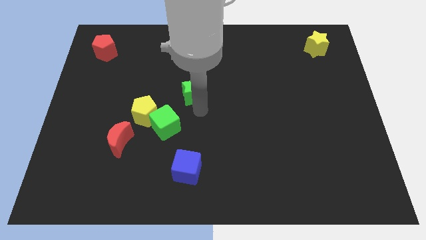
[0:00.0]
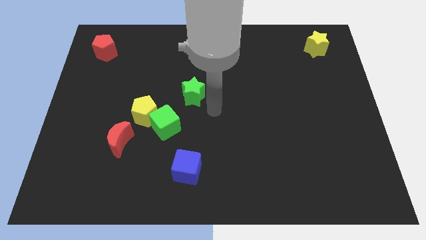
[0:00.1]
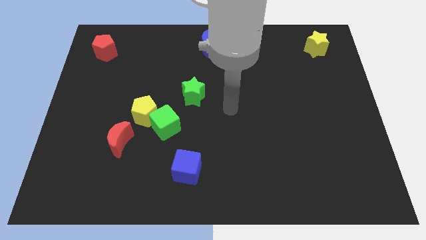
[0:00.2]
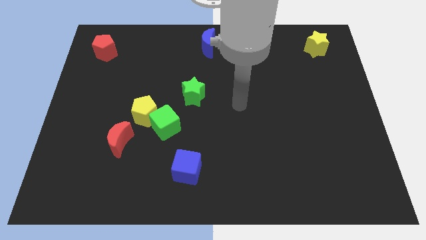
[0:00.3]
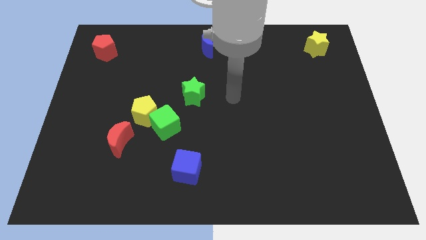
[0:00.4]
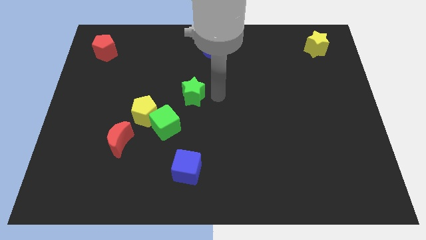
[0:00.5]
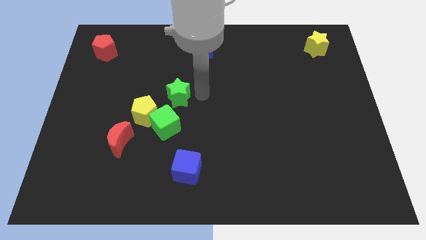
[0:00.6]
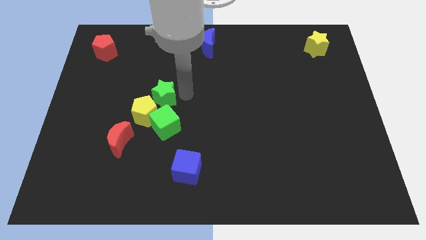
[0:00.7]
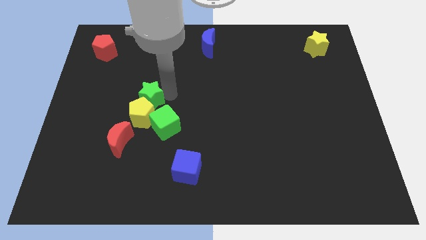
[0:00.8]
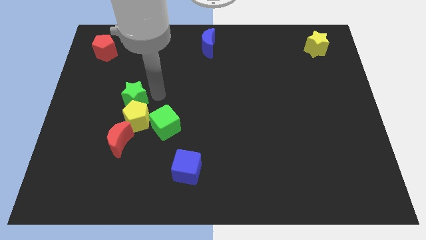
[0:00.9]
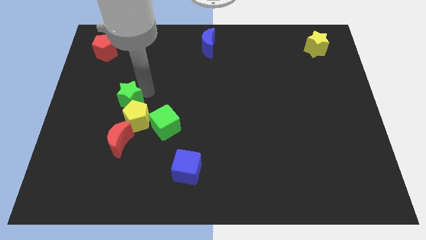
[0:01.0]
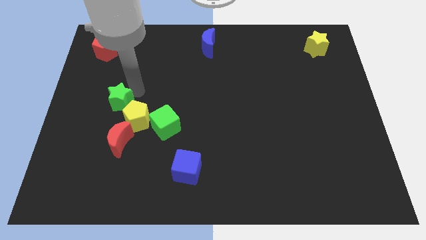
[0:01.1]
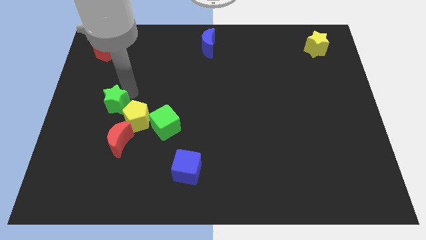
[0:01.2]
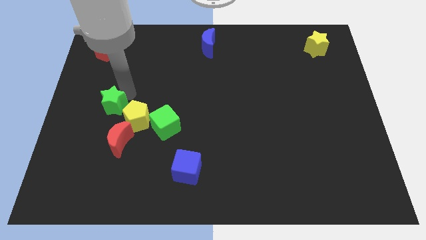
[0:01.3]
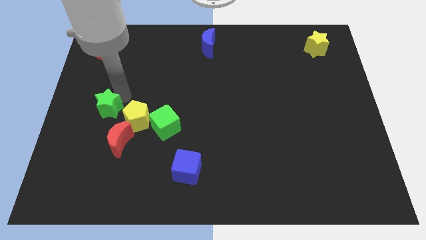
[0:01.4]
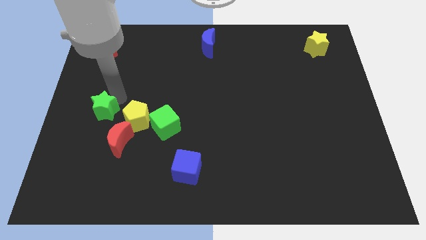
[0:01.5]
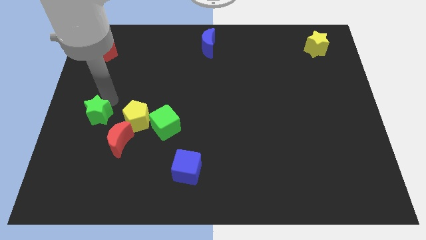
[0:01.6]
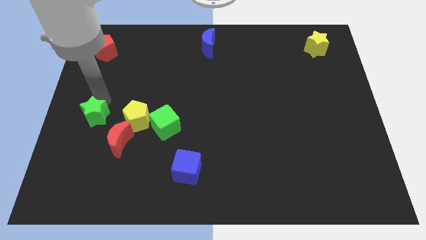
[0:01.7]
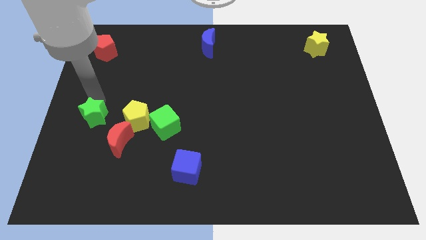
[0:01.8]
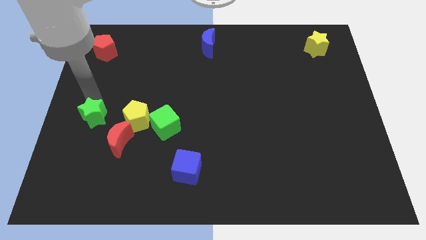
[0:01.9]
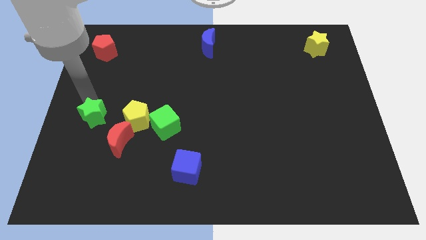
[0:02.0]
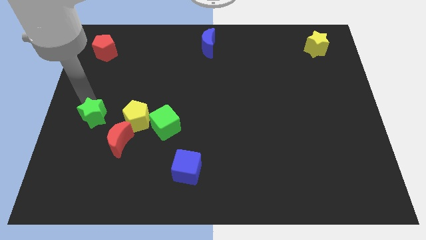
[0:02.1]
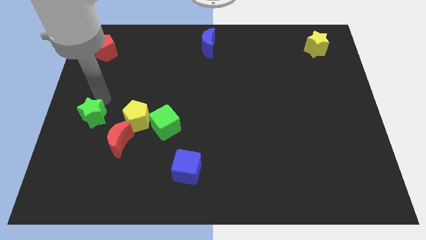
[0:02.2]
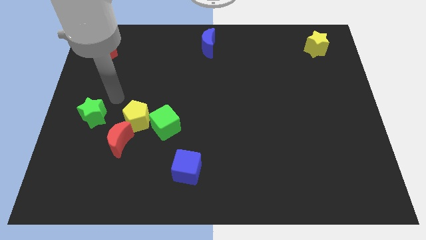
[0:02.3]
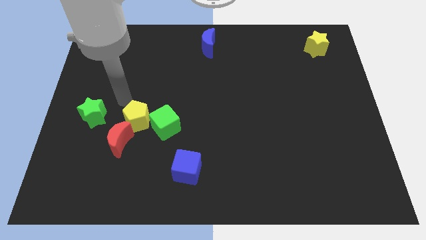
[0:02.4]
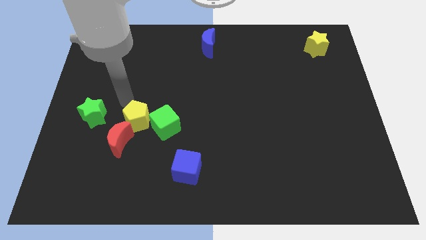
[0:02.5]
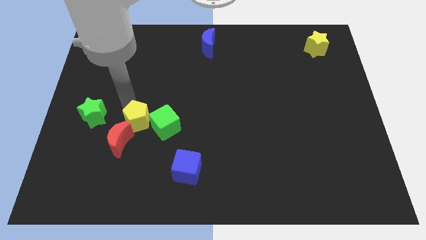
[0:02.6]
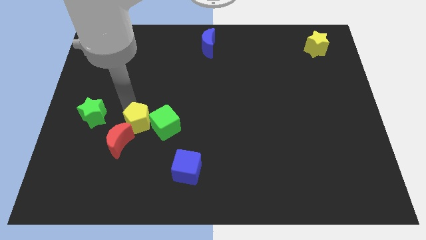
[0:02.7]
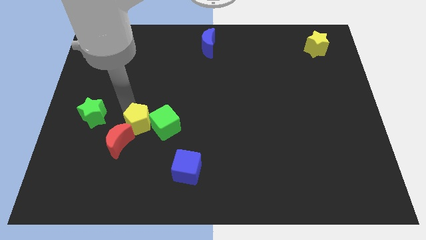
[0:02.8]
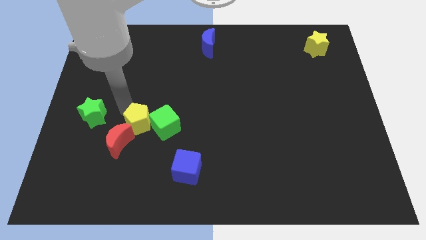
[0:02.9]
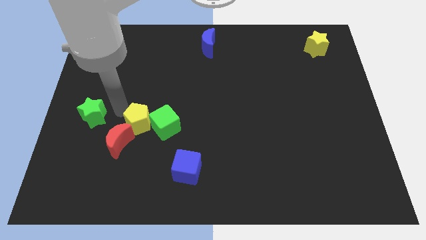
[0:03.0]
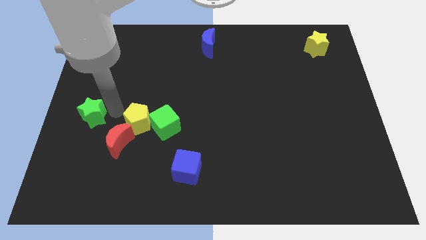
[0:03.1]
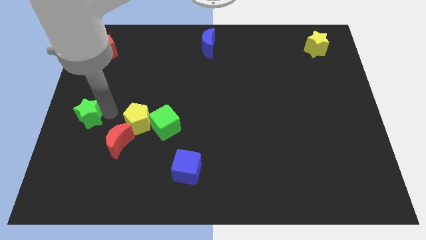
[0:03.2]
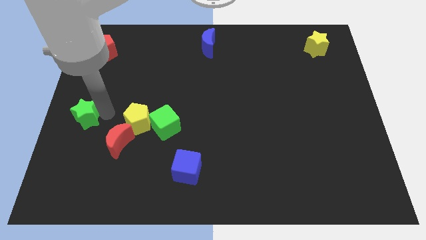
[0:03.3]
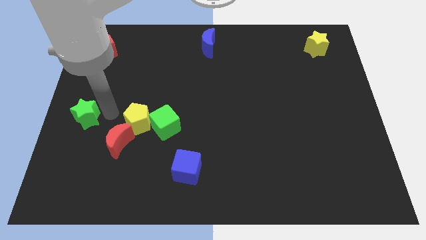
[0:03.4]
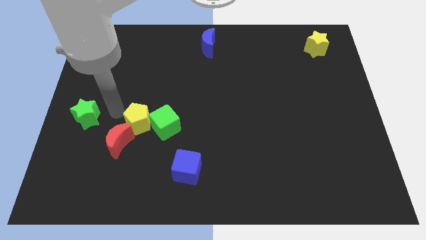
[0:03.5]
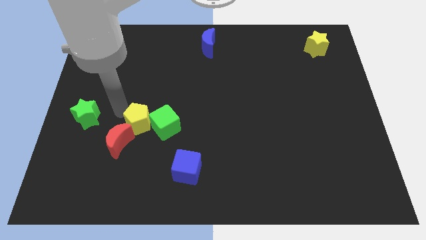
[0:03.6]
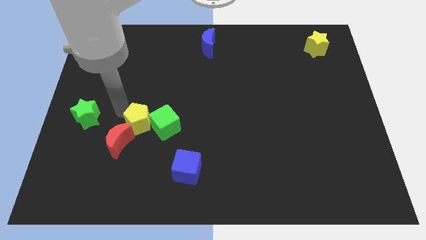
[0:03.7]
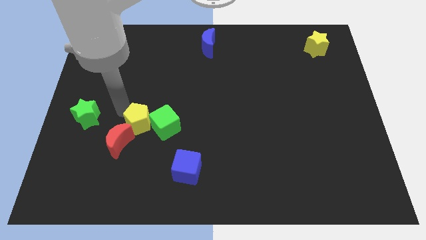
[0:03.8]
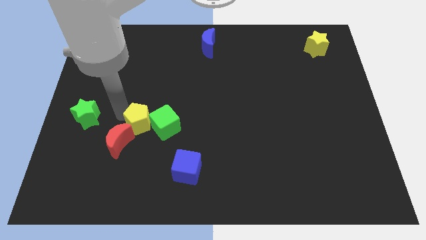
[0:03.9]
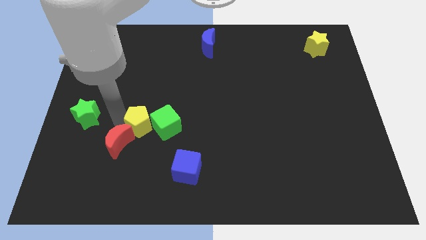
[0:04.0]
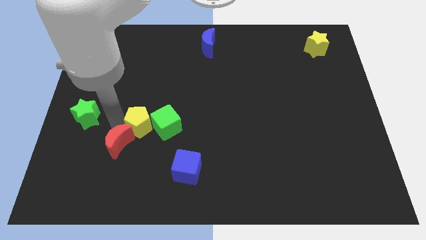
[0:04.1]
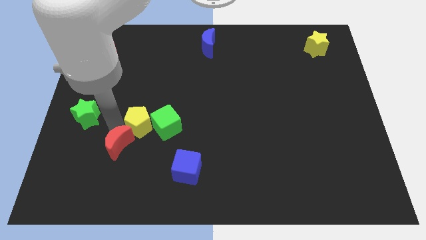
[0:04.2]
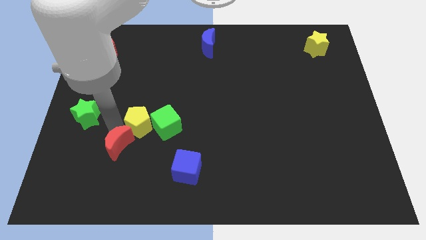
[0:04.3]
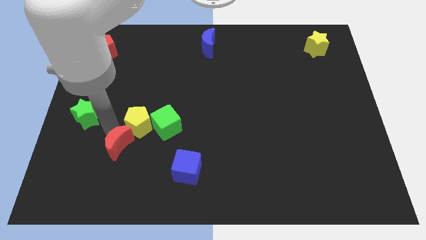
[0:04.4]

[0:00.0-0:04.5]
place the green star at the left side of the board

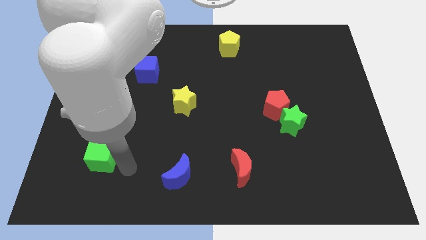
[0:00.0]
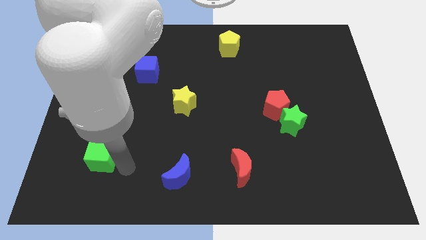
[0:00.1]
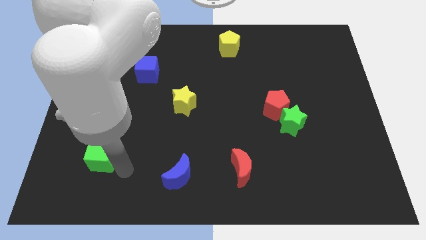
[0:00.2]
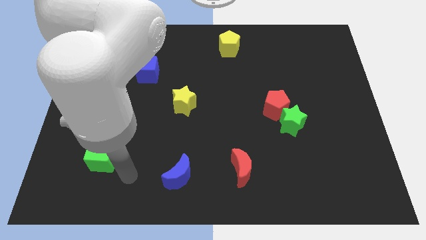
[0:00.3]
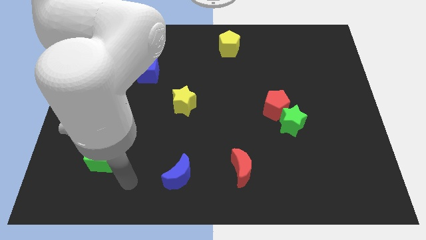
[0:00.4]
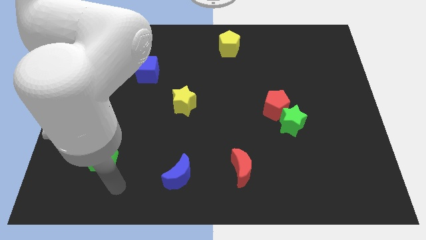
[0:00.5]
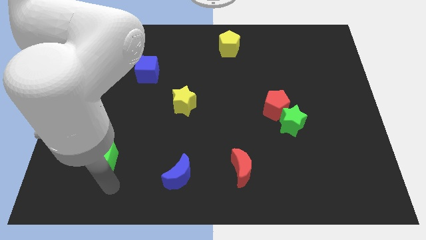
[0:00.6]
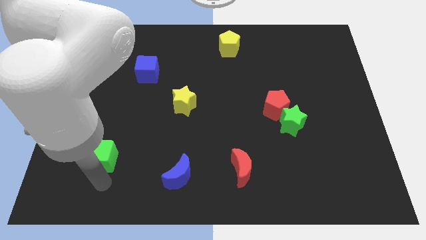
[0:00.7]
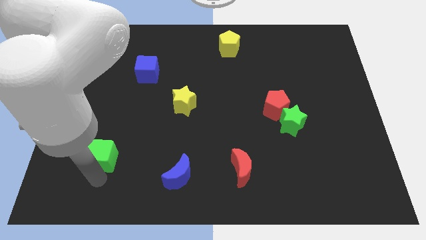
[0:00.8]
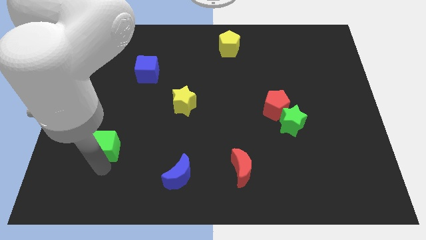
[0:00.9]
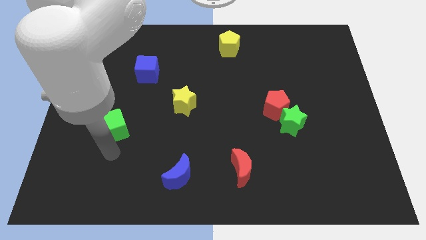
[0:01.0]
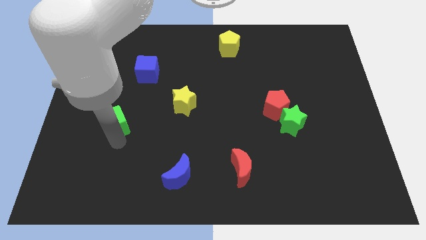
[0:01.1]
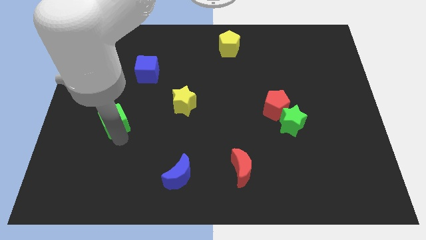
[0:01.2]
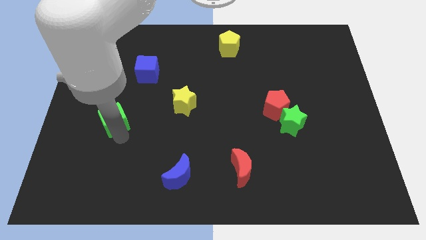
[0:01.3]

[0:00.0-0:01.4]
push the green cube towards the top

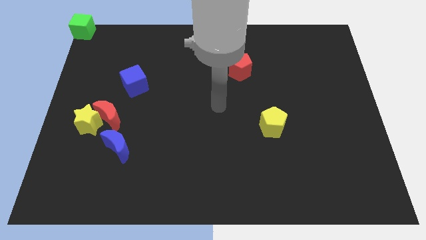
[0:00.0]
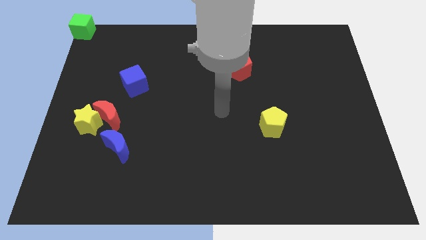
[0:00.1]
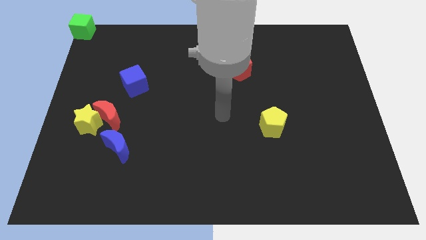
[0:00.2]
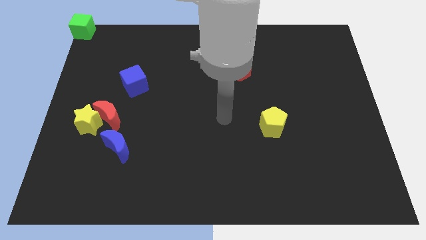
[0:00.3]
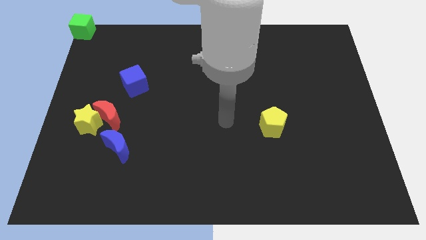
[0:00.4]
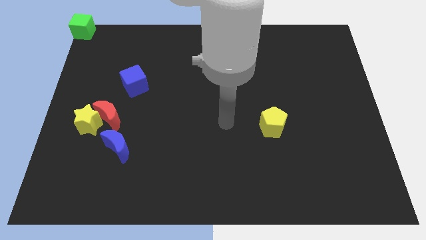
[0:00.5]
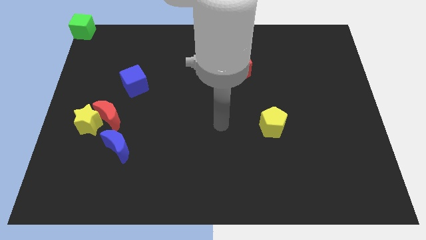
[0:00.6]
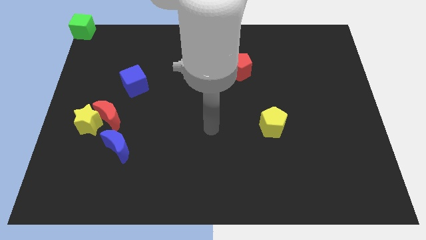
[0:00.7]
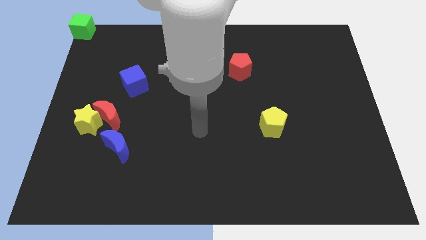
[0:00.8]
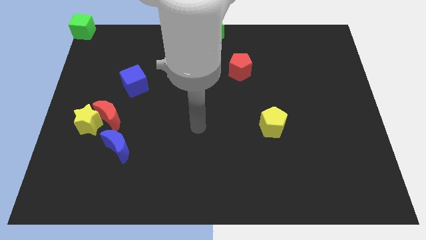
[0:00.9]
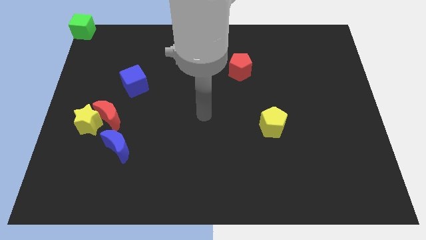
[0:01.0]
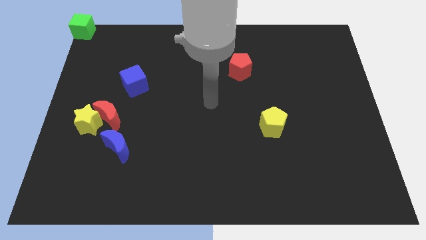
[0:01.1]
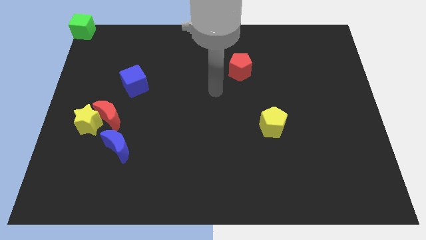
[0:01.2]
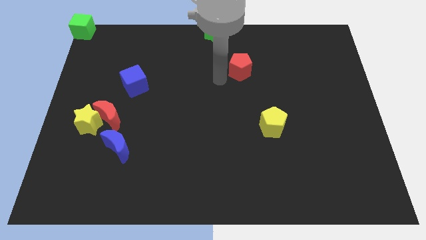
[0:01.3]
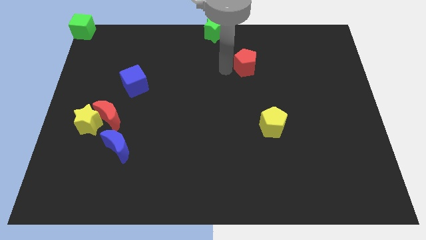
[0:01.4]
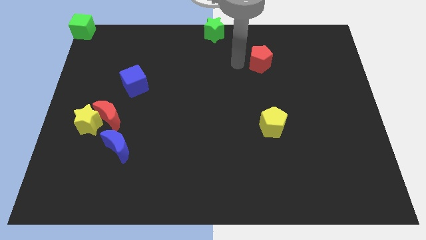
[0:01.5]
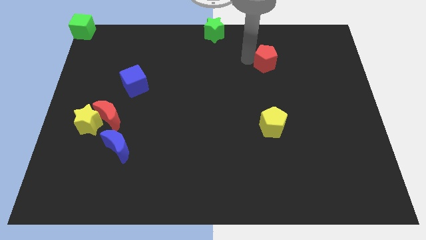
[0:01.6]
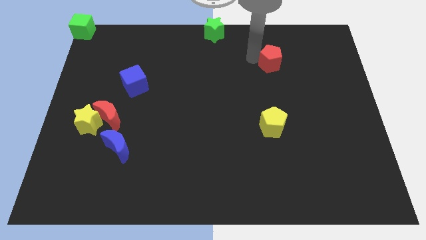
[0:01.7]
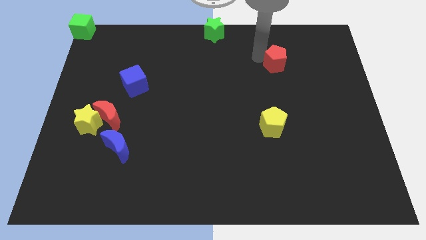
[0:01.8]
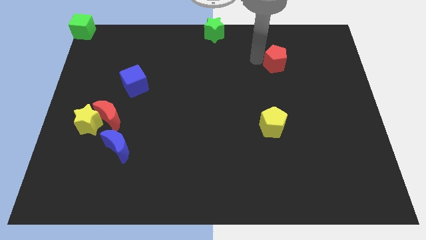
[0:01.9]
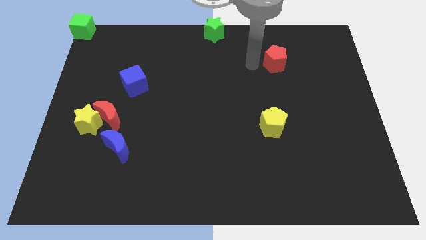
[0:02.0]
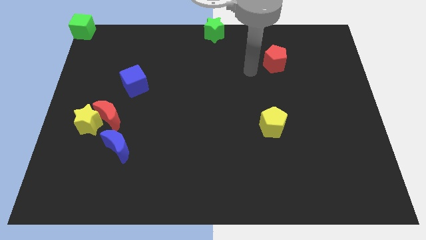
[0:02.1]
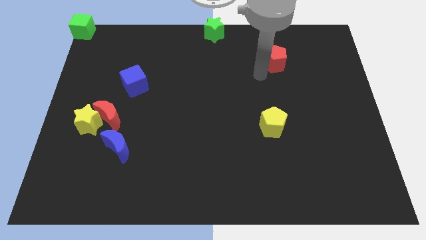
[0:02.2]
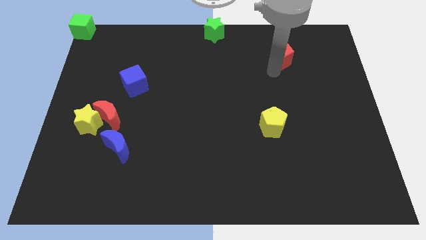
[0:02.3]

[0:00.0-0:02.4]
push the red pentagon above the yellow pentagon vertically

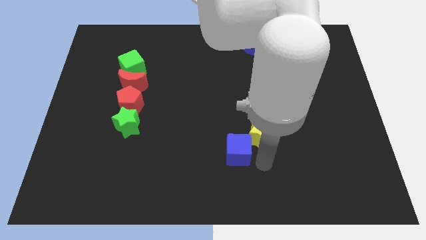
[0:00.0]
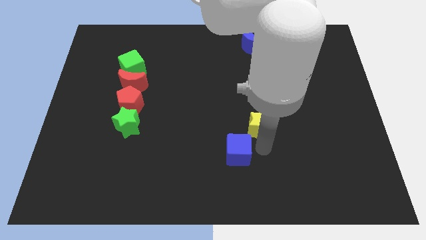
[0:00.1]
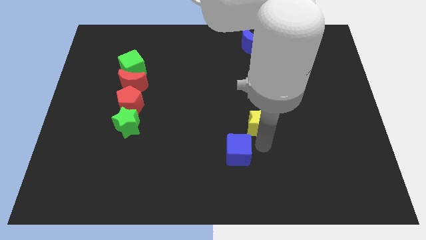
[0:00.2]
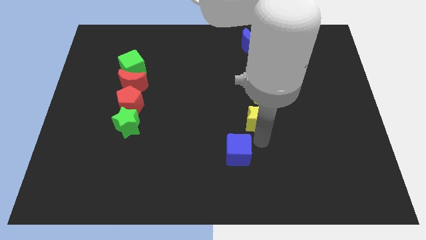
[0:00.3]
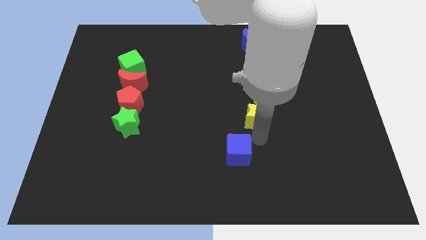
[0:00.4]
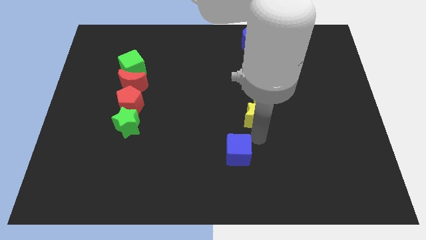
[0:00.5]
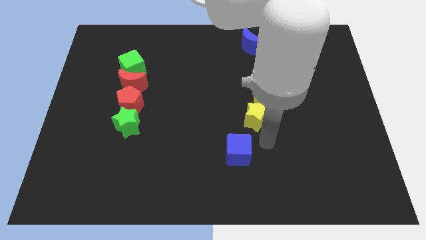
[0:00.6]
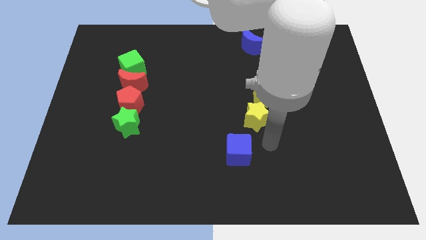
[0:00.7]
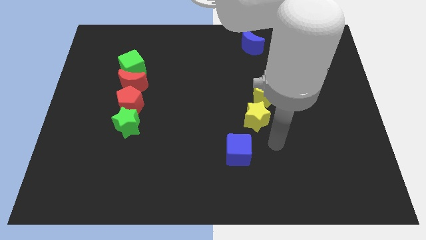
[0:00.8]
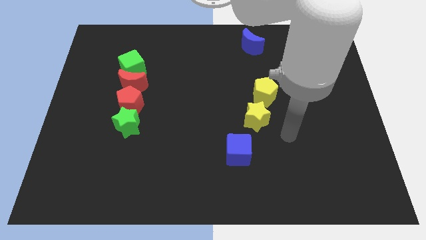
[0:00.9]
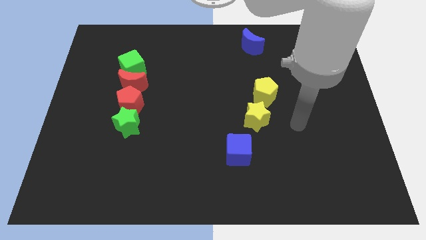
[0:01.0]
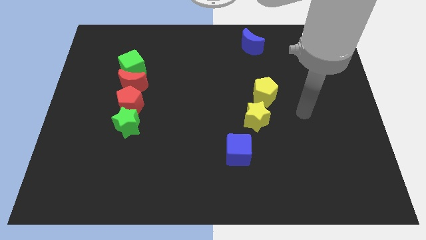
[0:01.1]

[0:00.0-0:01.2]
drag the yellow star close to the yellow pentagon
